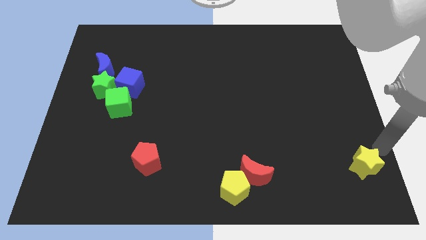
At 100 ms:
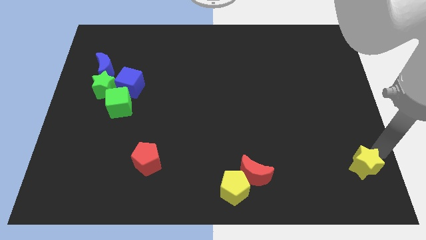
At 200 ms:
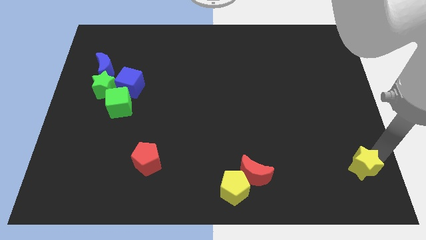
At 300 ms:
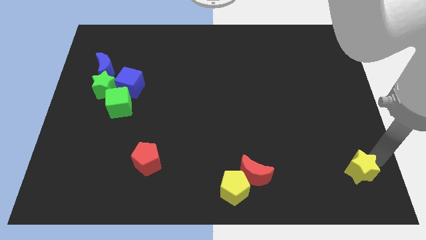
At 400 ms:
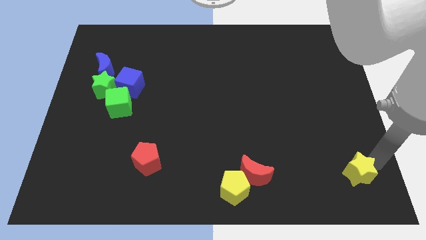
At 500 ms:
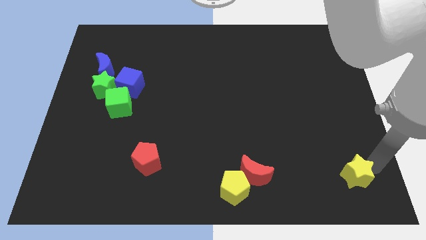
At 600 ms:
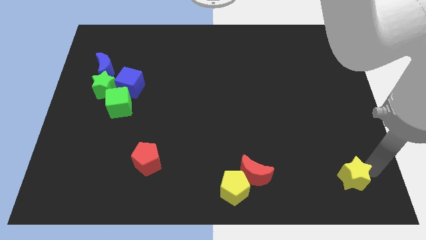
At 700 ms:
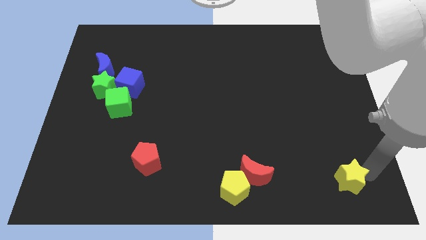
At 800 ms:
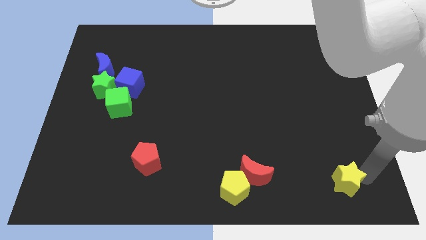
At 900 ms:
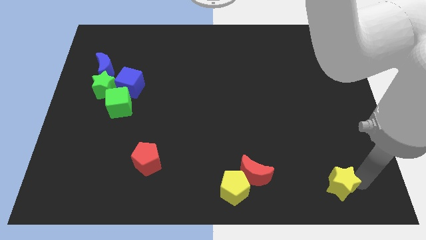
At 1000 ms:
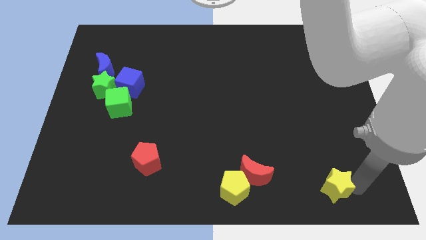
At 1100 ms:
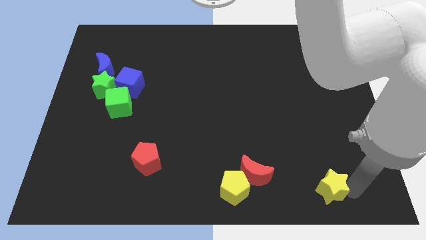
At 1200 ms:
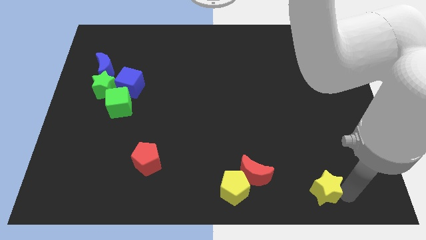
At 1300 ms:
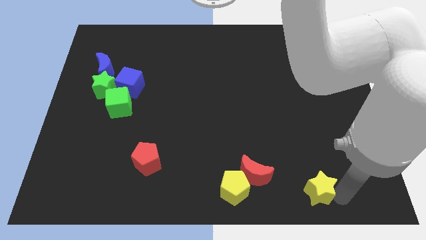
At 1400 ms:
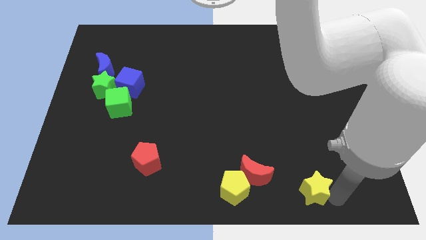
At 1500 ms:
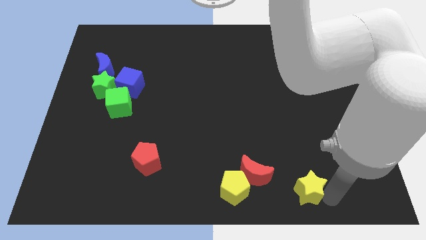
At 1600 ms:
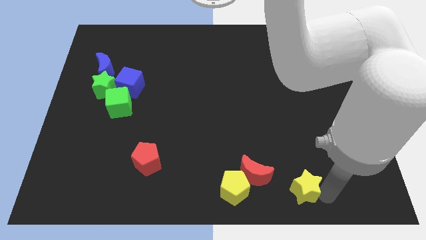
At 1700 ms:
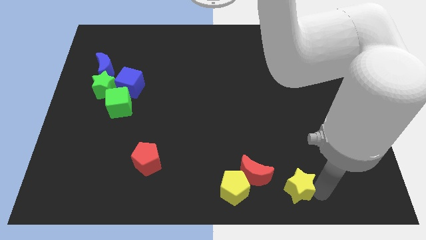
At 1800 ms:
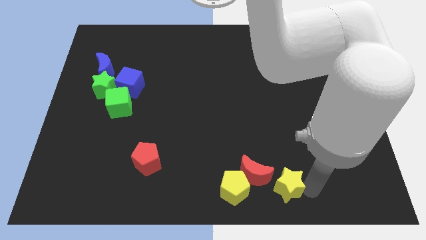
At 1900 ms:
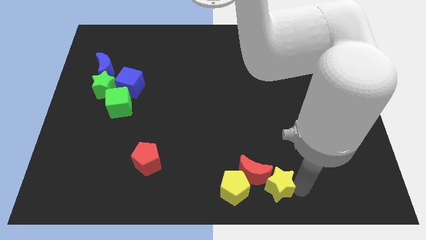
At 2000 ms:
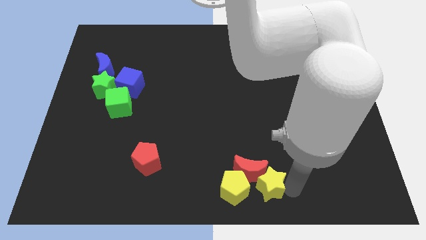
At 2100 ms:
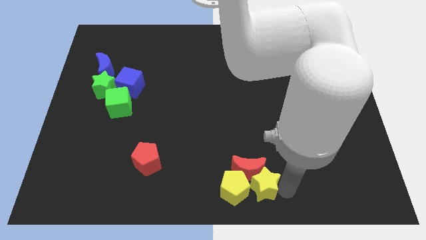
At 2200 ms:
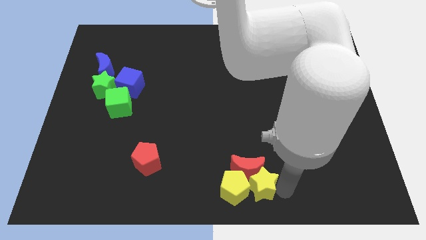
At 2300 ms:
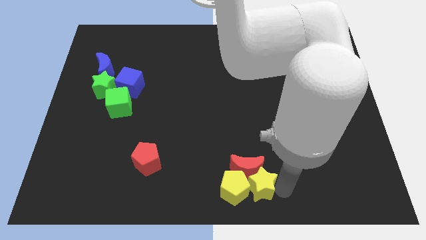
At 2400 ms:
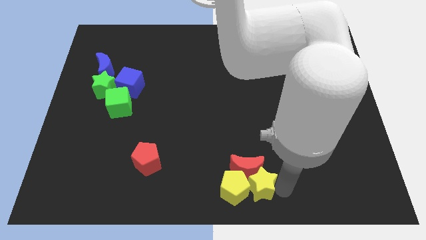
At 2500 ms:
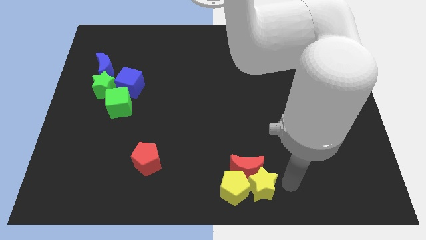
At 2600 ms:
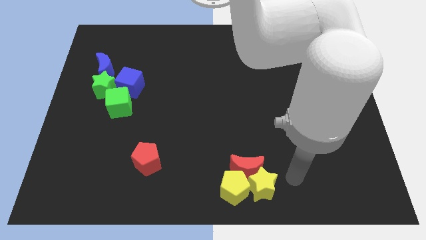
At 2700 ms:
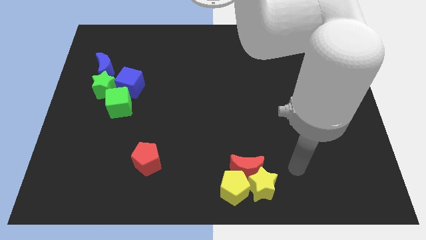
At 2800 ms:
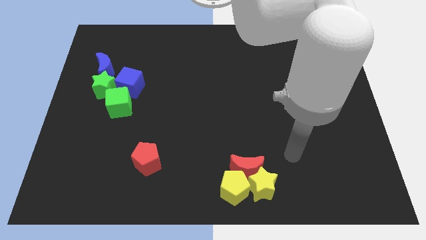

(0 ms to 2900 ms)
push the yellow star to the bottom of the red crescent

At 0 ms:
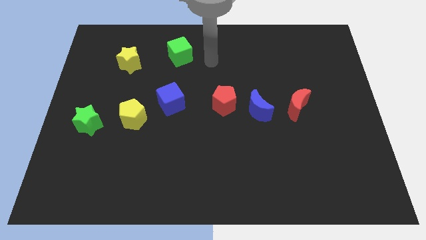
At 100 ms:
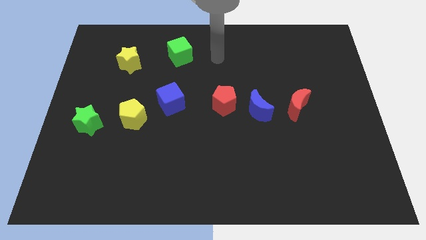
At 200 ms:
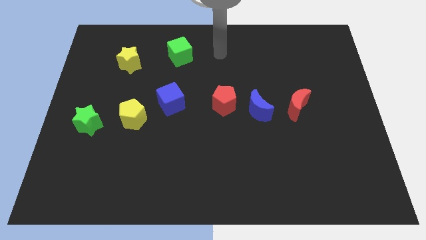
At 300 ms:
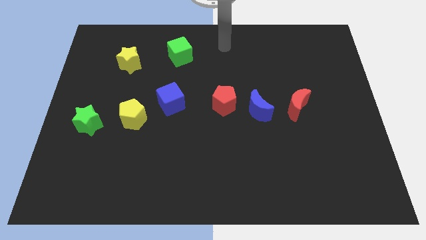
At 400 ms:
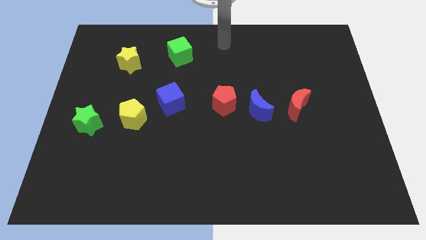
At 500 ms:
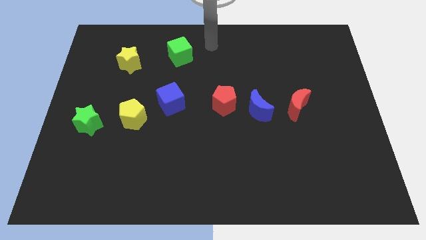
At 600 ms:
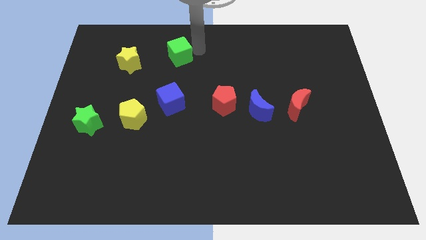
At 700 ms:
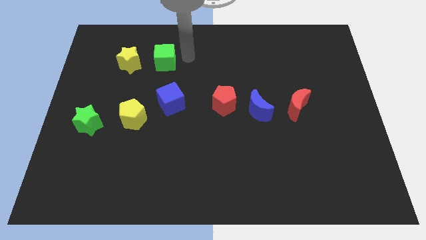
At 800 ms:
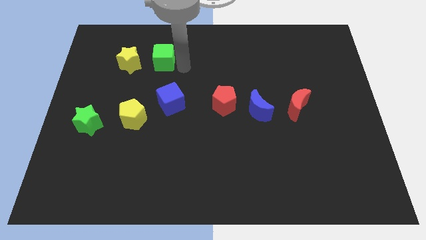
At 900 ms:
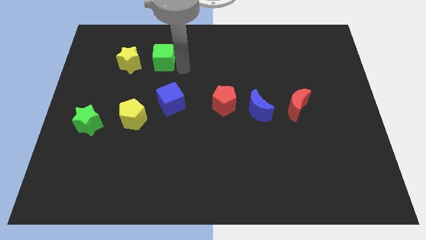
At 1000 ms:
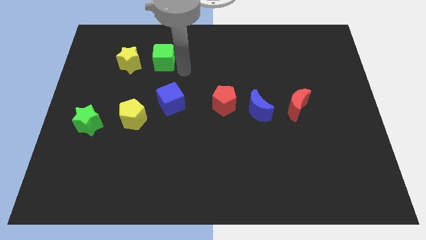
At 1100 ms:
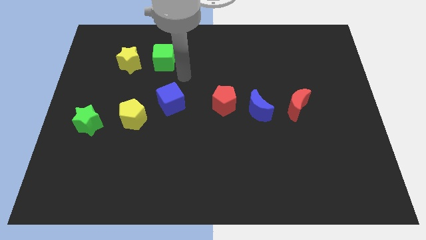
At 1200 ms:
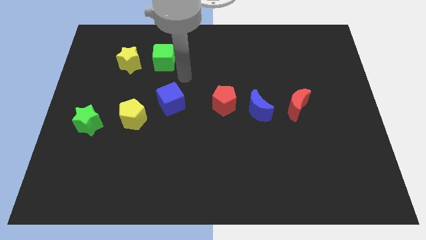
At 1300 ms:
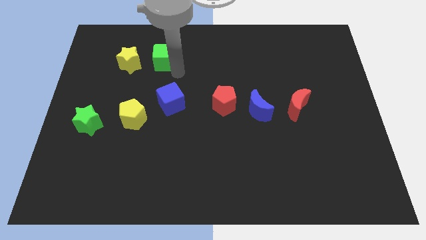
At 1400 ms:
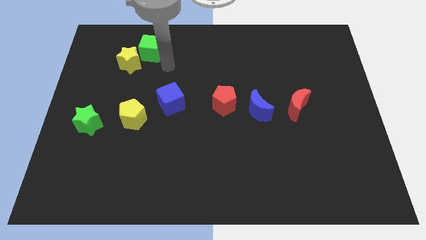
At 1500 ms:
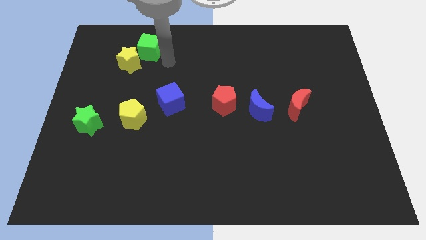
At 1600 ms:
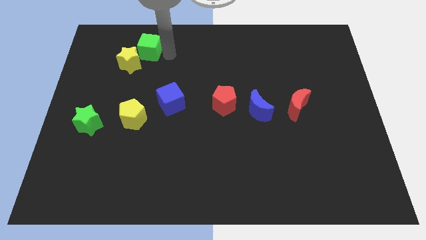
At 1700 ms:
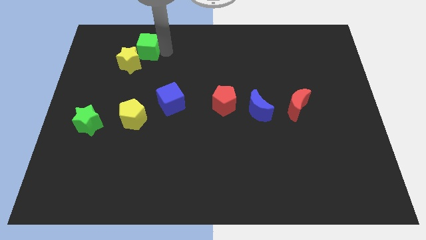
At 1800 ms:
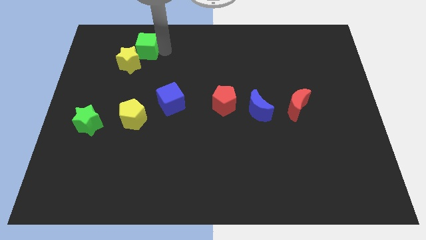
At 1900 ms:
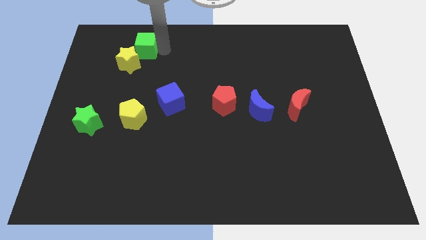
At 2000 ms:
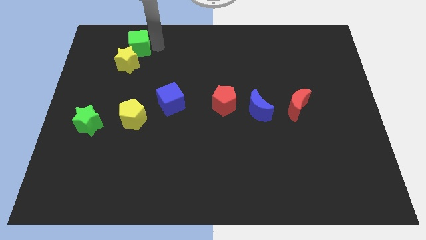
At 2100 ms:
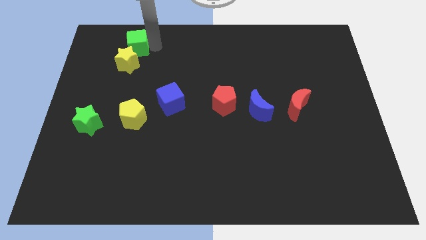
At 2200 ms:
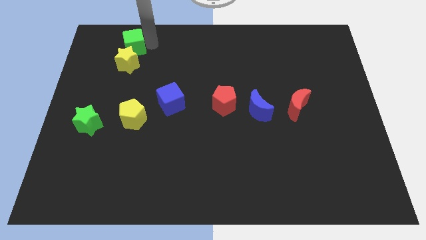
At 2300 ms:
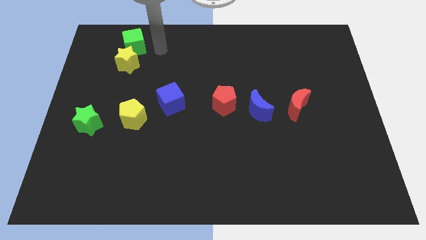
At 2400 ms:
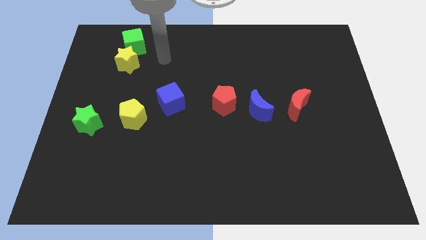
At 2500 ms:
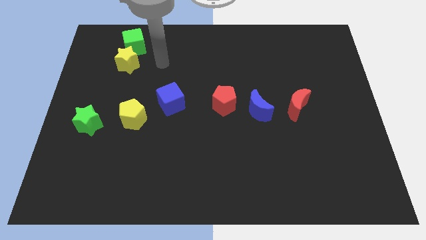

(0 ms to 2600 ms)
place the green cube above the yellow star

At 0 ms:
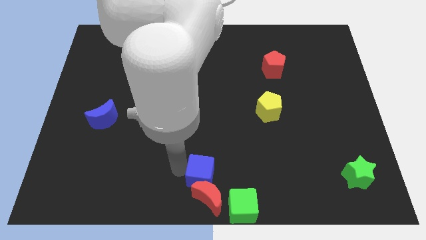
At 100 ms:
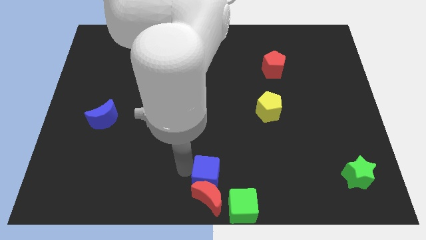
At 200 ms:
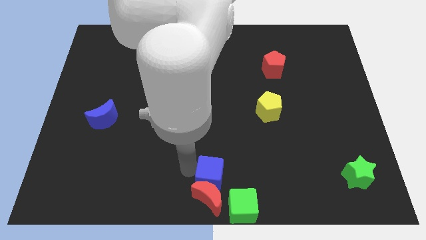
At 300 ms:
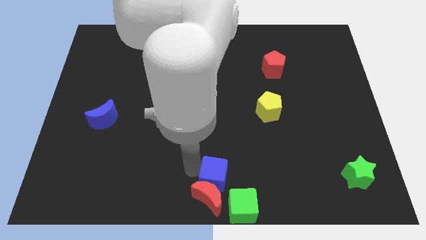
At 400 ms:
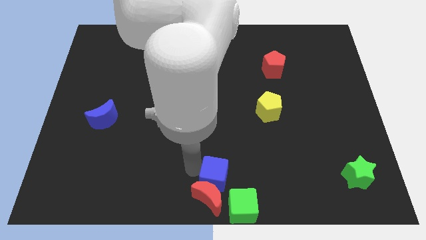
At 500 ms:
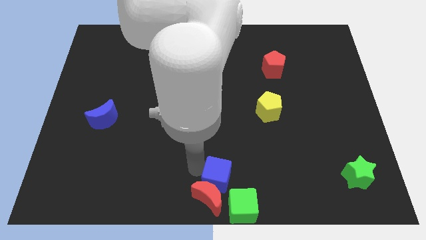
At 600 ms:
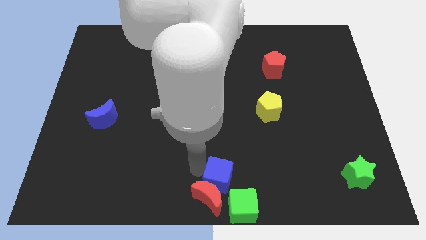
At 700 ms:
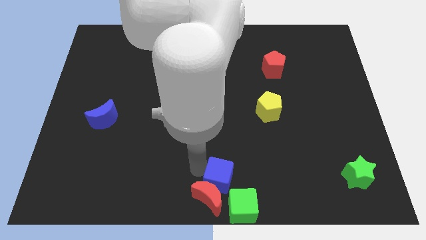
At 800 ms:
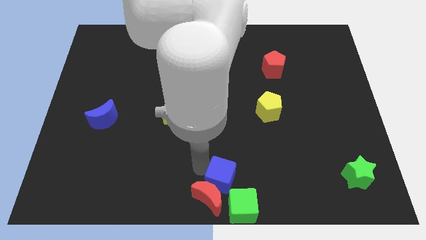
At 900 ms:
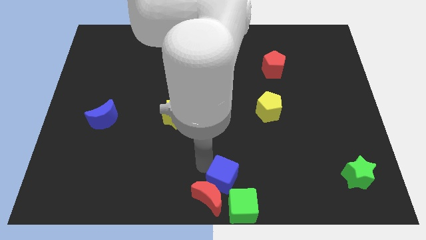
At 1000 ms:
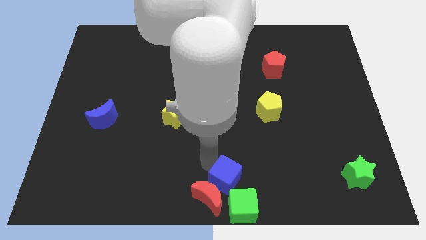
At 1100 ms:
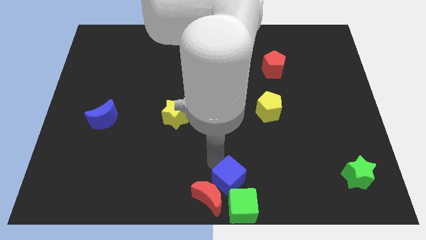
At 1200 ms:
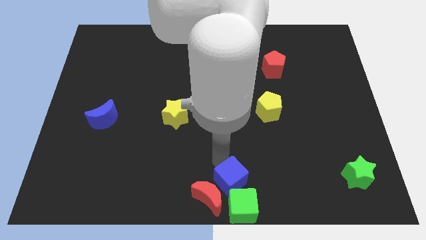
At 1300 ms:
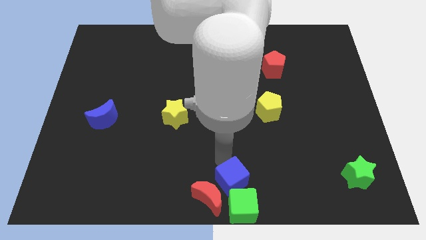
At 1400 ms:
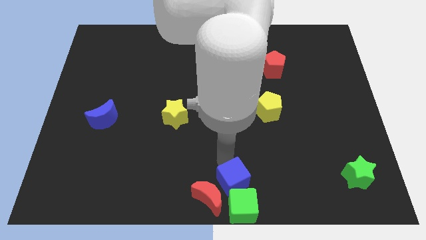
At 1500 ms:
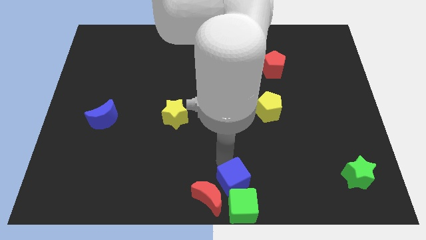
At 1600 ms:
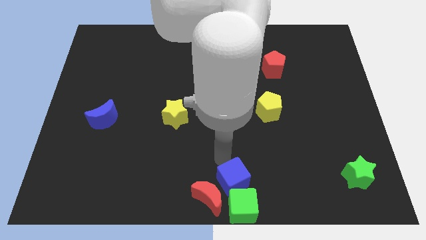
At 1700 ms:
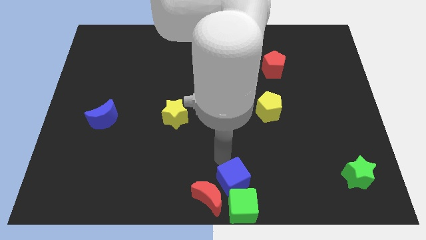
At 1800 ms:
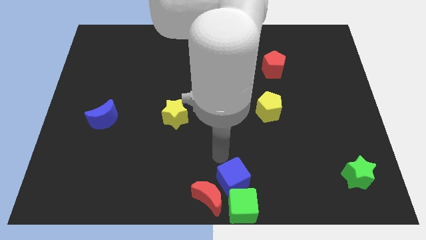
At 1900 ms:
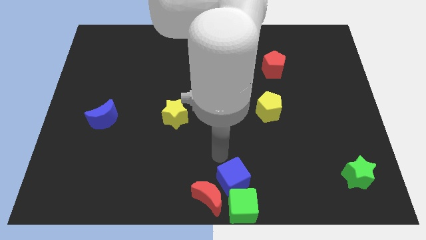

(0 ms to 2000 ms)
make the blue cube to touch the top side of the green cube

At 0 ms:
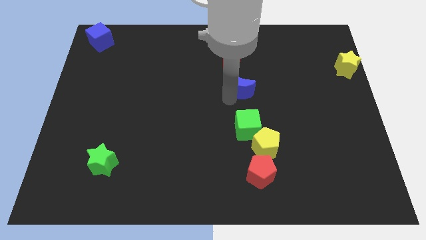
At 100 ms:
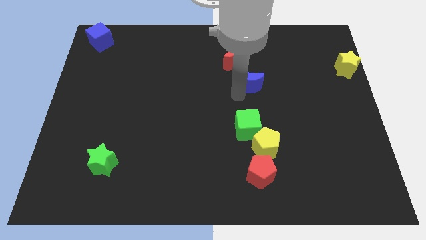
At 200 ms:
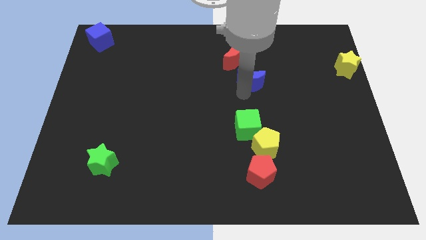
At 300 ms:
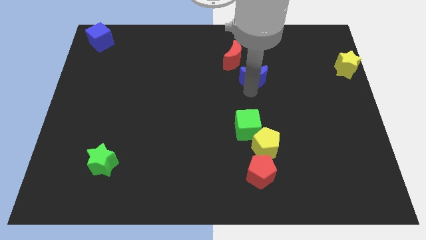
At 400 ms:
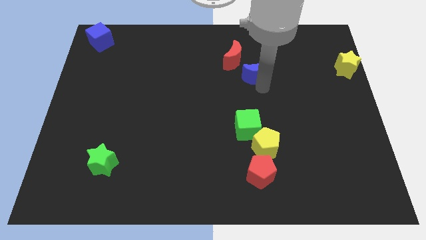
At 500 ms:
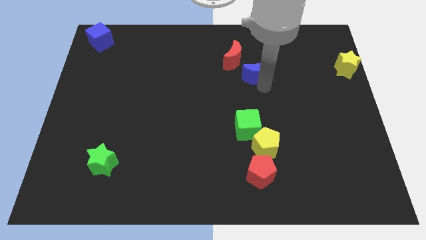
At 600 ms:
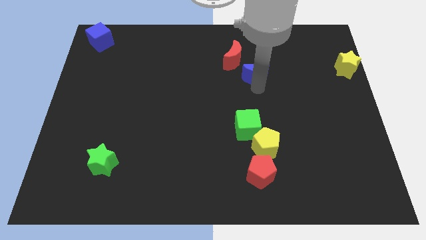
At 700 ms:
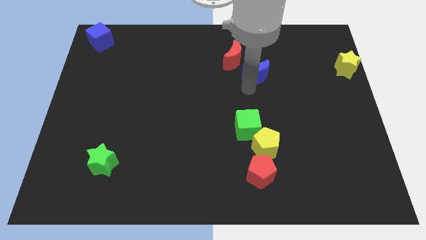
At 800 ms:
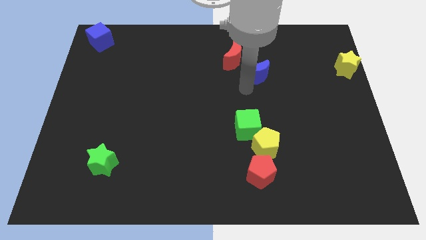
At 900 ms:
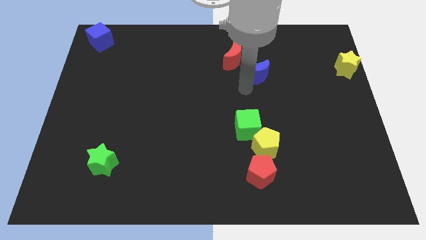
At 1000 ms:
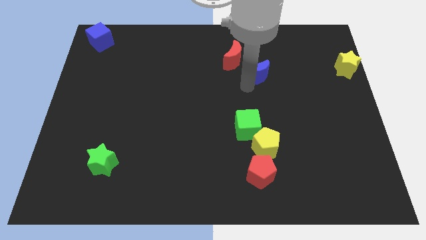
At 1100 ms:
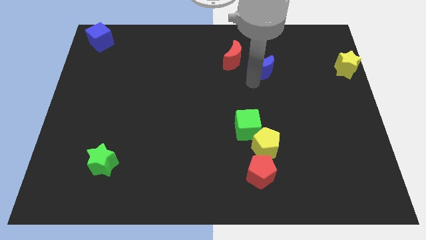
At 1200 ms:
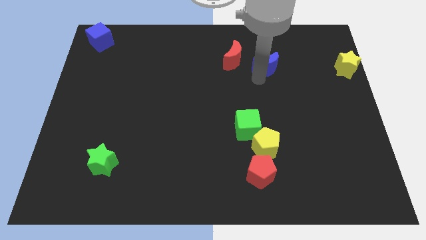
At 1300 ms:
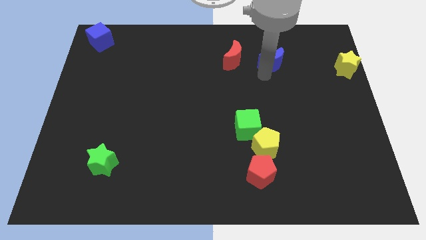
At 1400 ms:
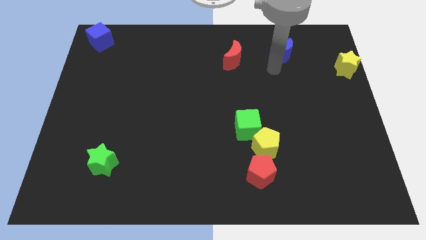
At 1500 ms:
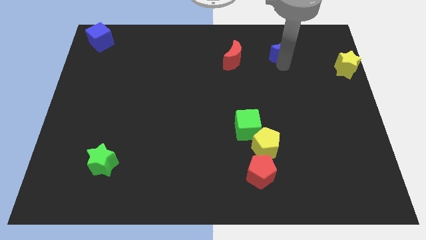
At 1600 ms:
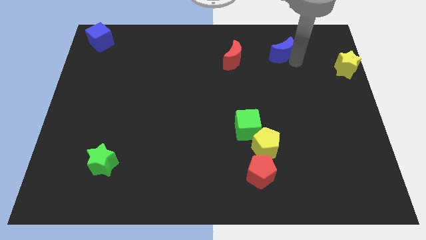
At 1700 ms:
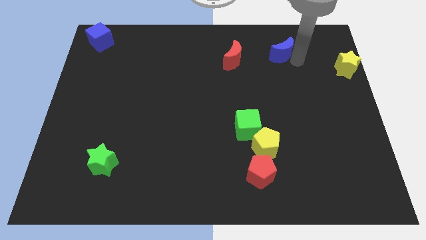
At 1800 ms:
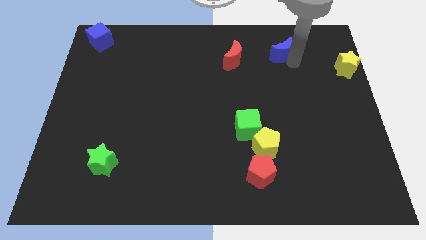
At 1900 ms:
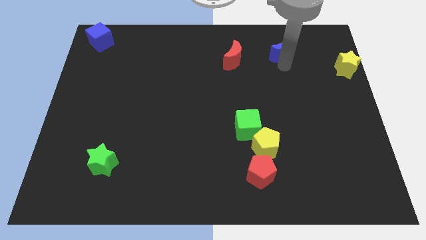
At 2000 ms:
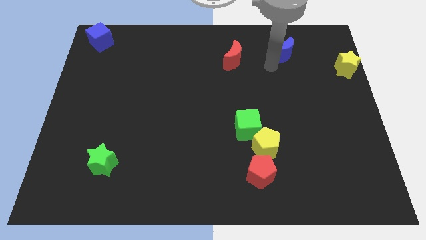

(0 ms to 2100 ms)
place blue moon to the right of red moon
